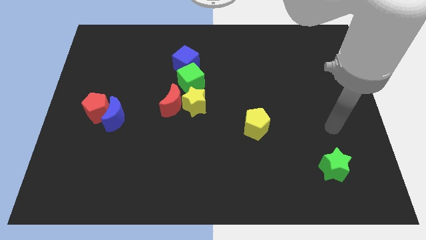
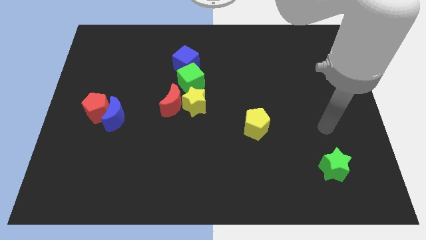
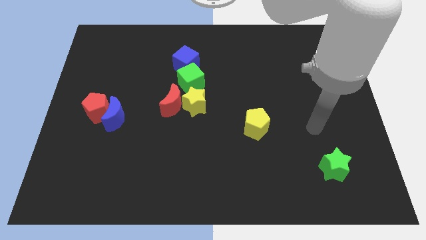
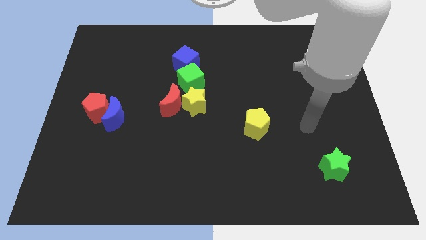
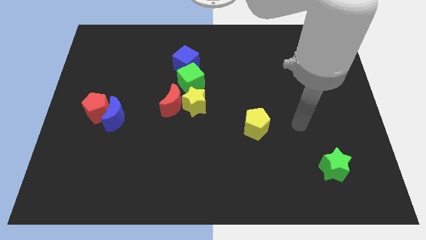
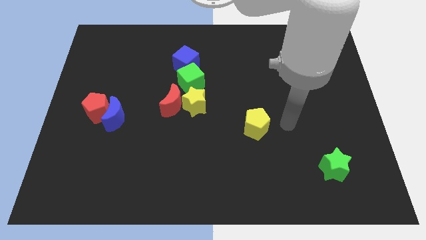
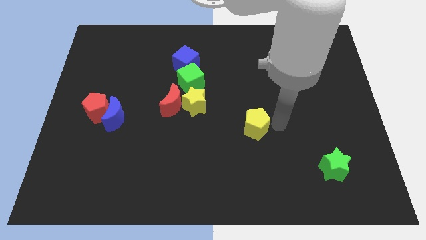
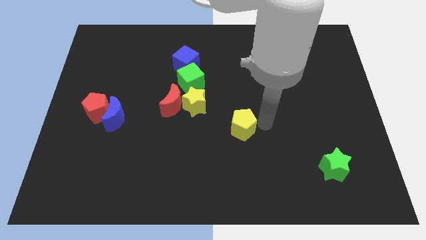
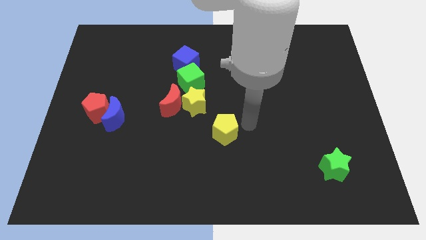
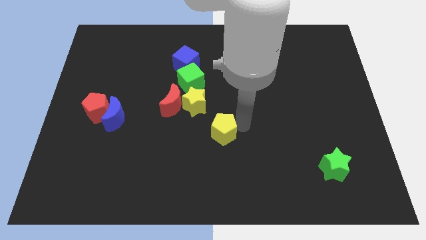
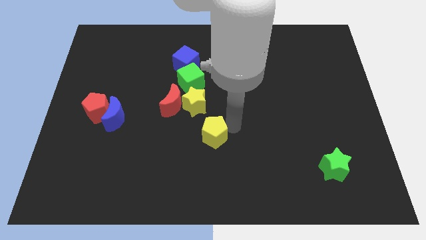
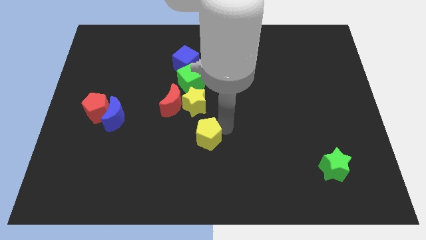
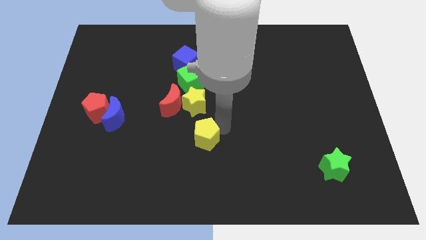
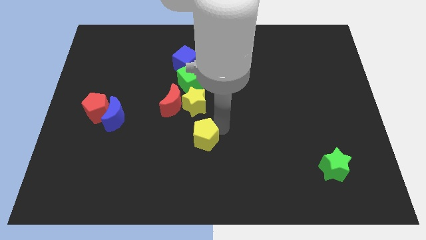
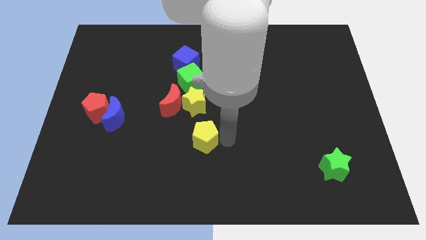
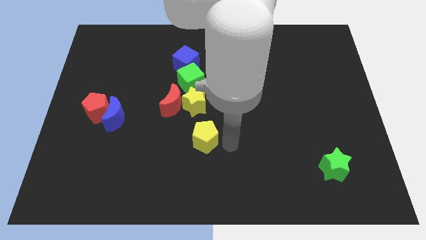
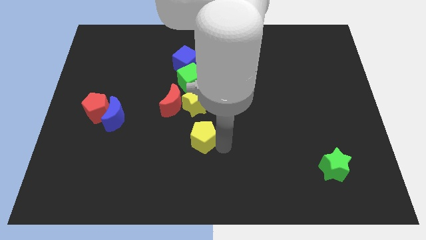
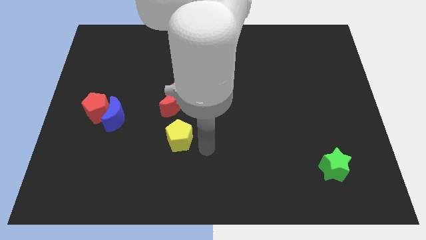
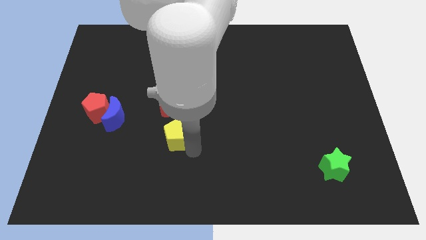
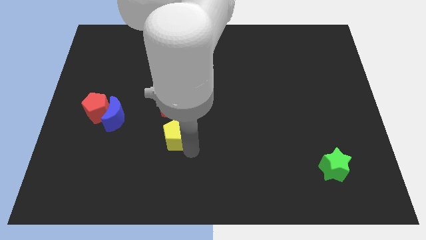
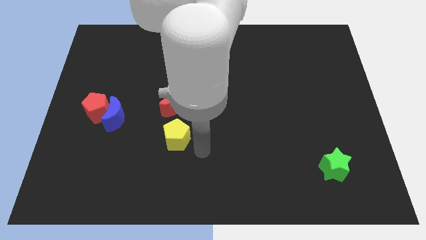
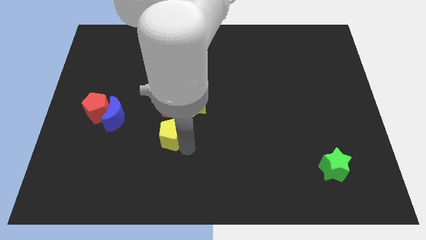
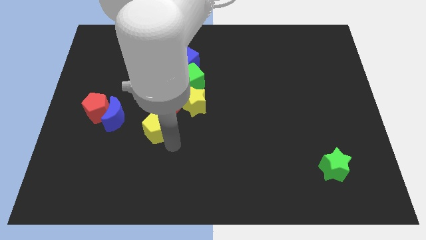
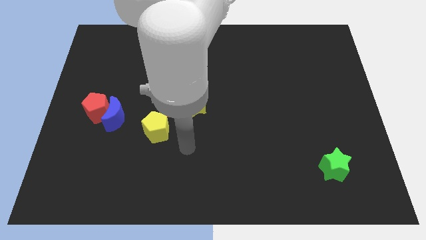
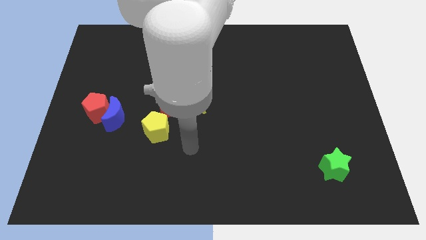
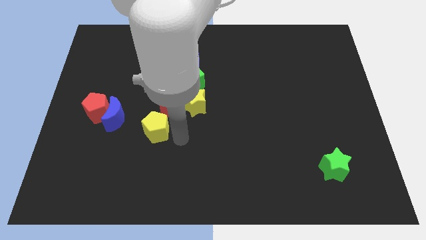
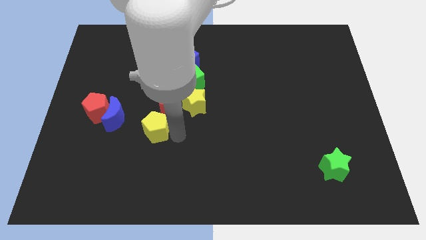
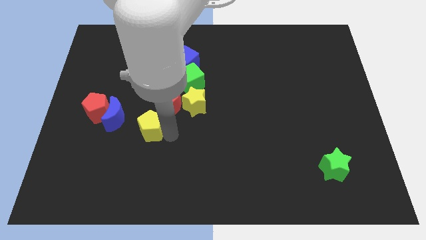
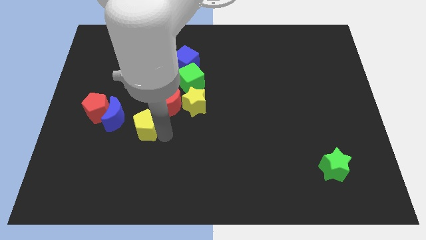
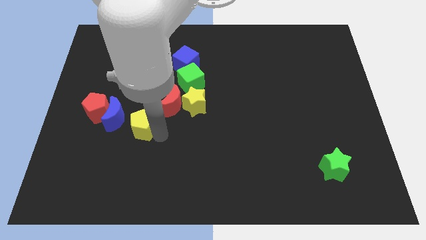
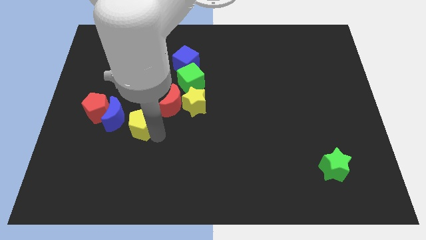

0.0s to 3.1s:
move the yellow pentagon towards the right side of the blue moon

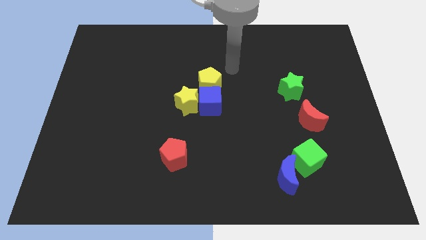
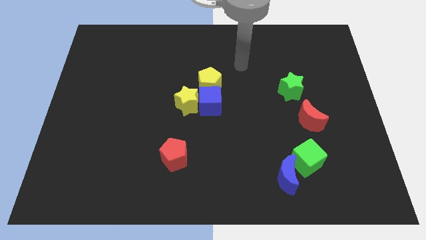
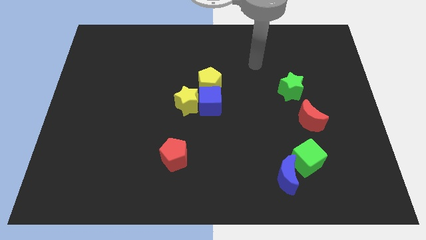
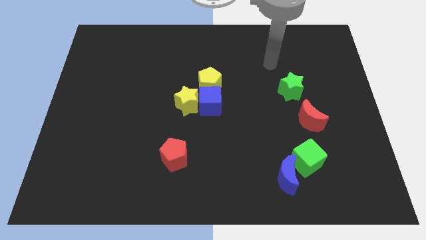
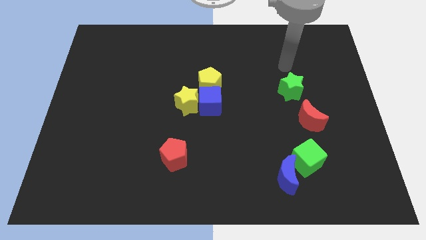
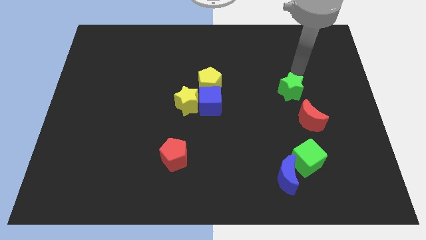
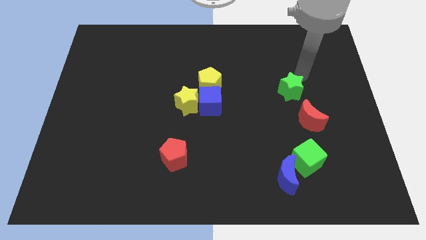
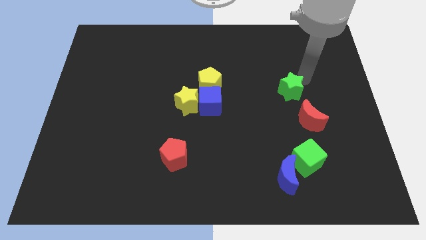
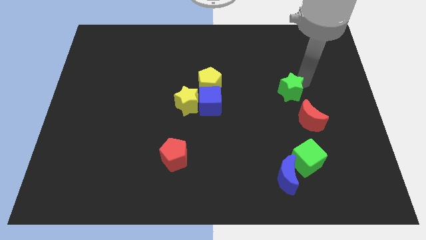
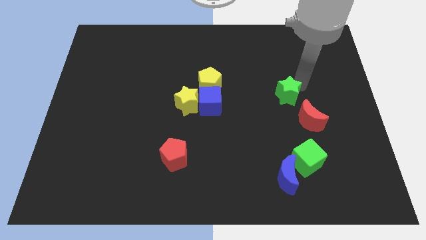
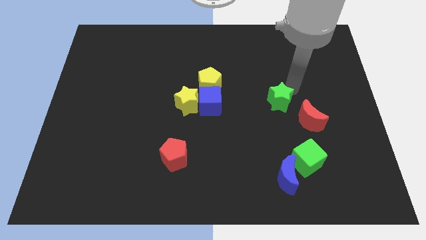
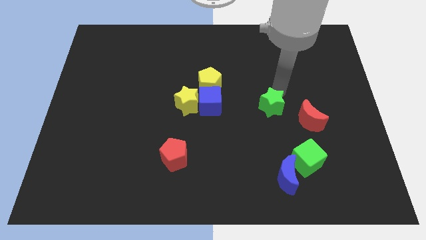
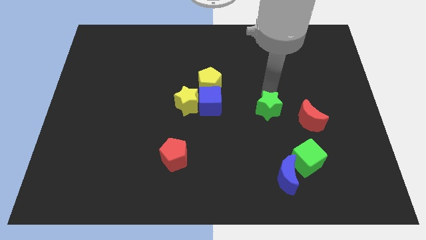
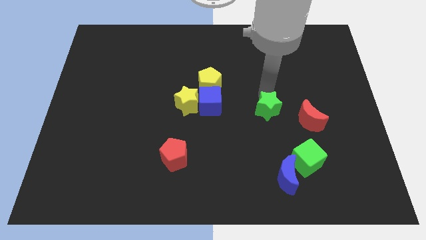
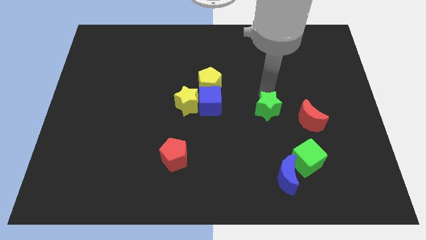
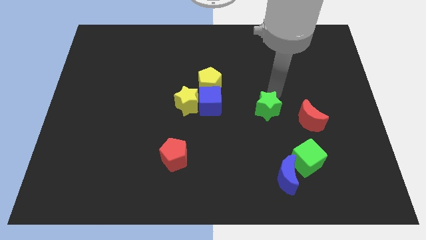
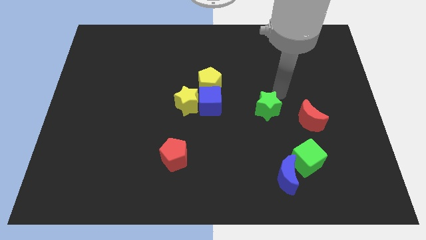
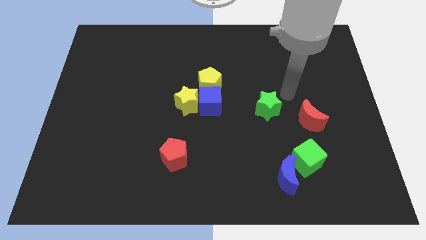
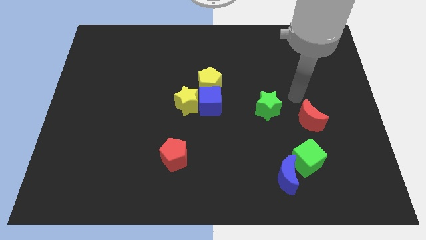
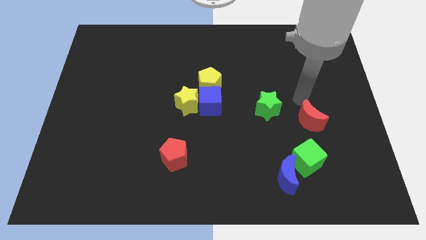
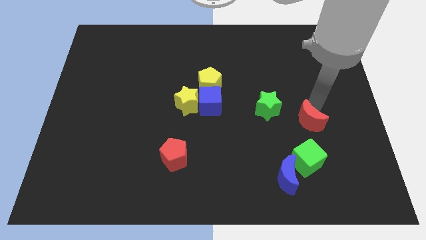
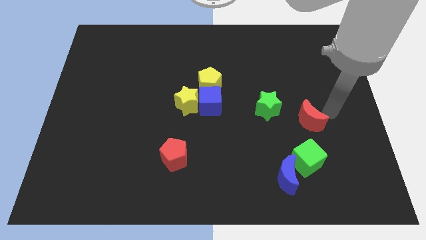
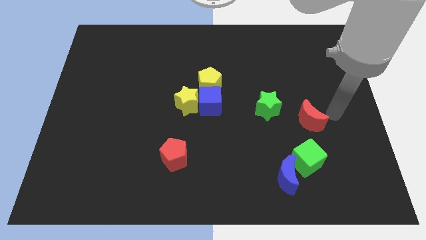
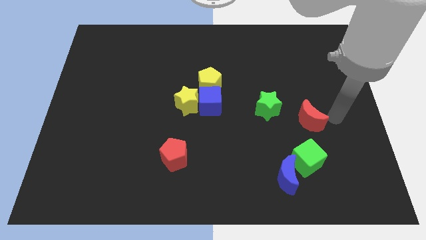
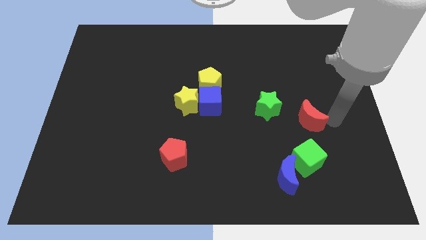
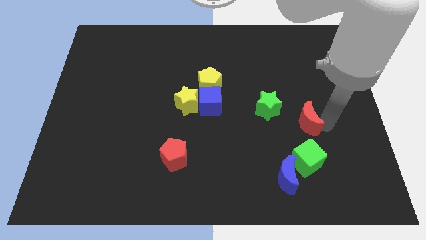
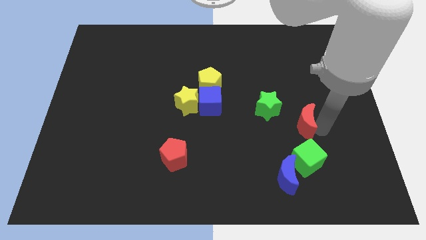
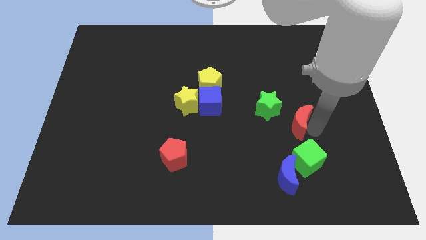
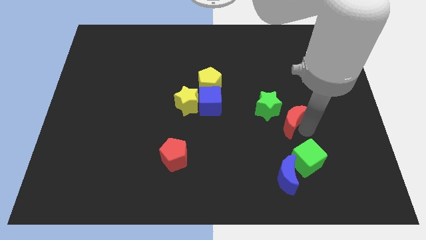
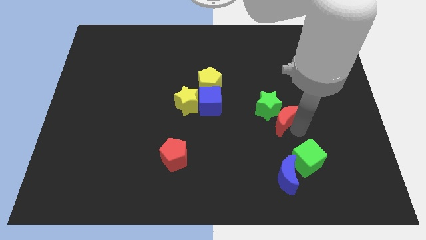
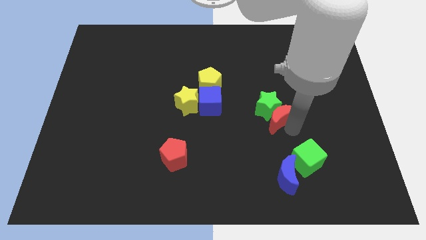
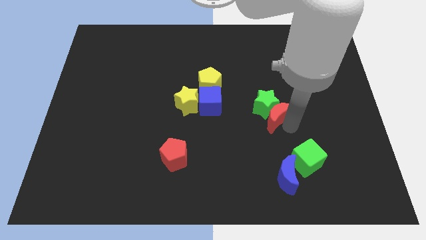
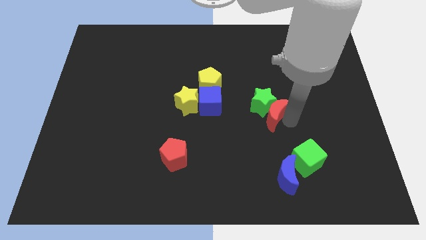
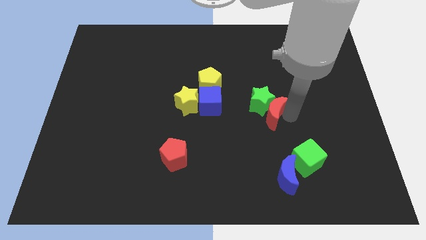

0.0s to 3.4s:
slide the green star and red moon to the right side of the blue cube

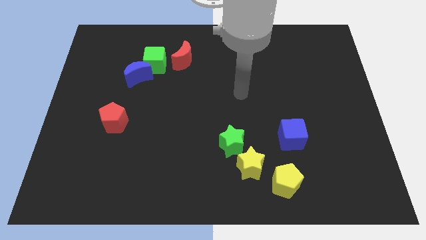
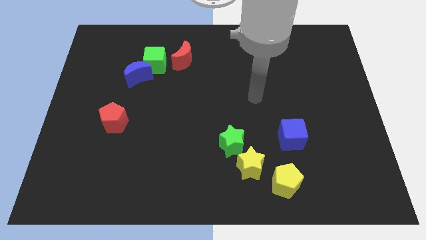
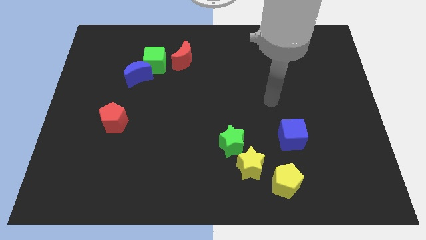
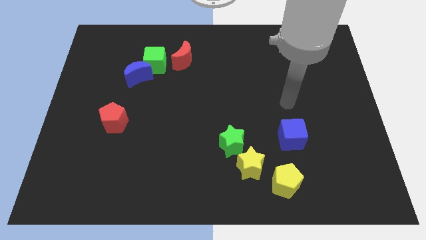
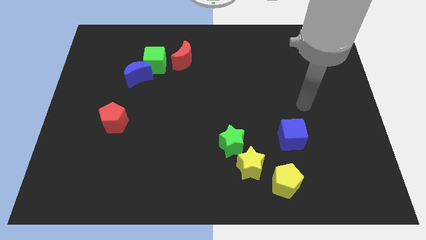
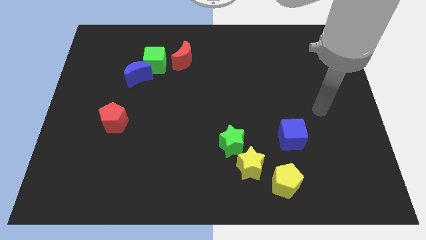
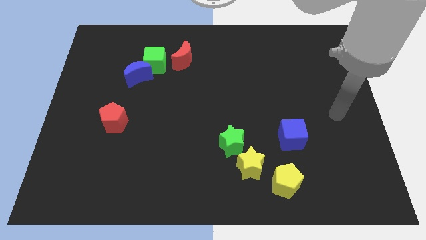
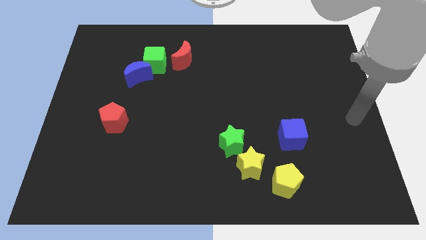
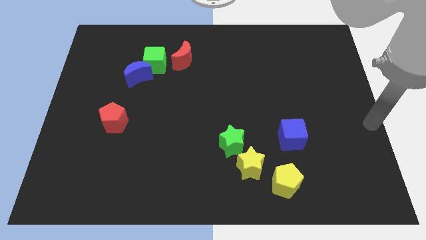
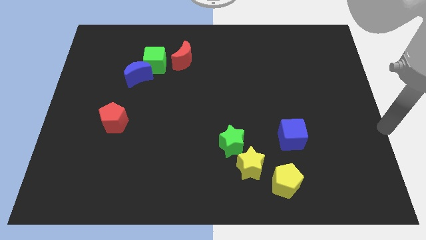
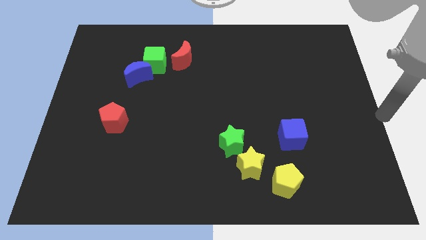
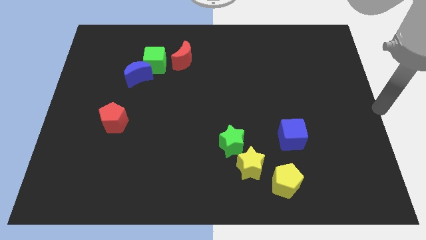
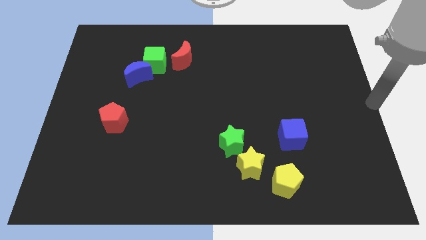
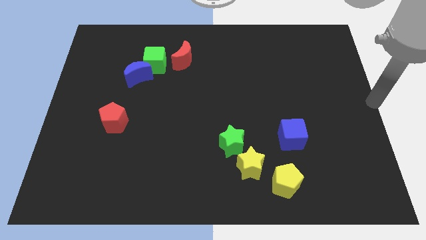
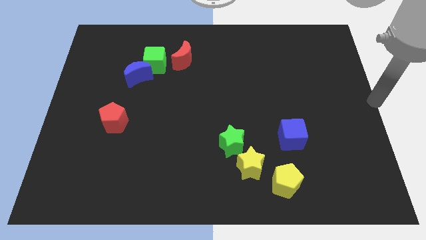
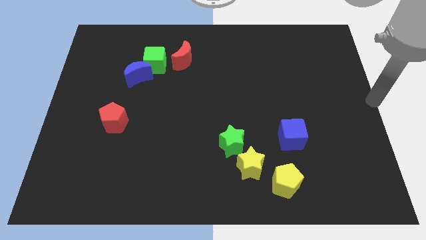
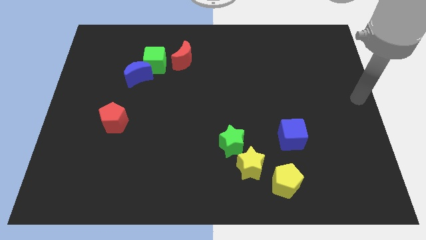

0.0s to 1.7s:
move your arm to the center right side of the board

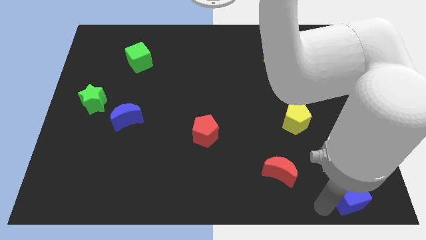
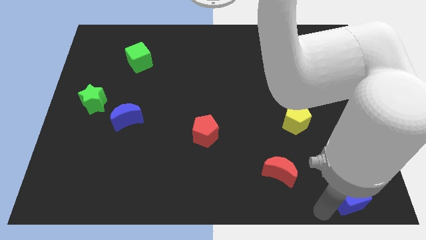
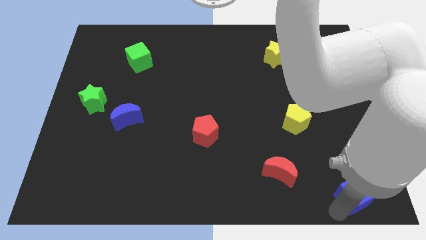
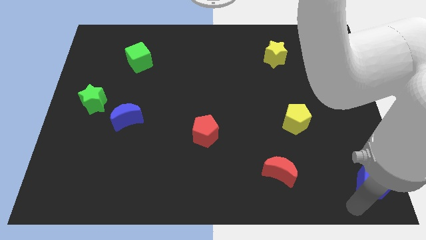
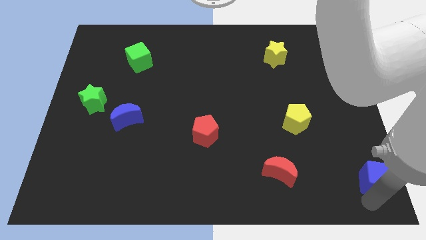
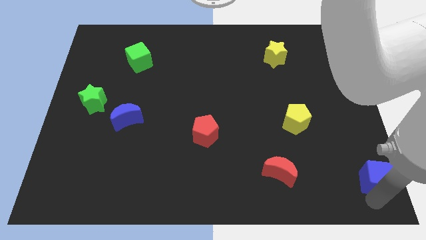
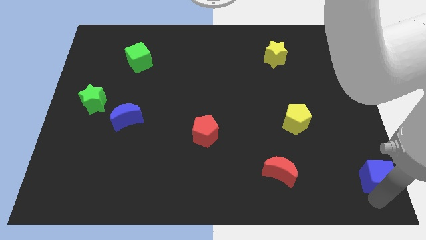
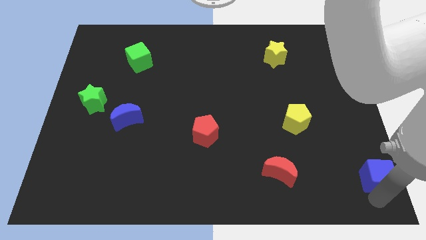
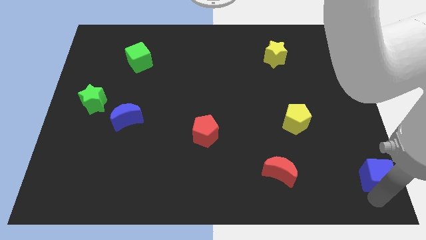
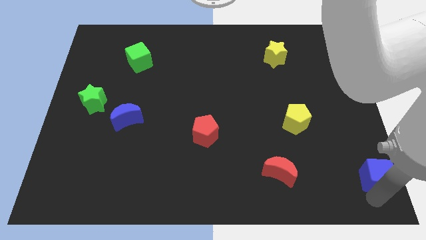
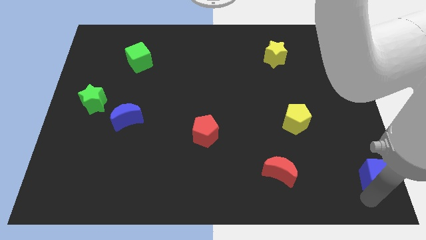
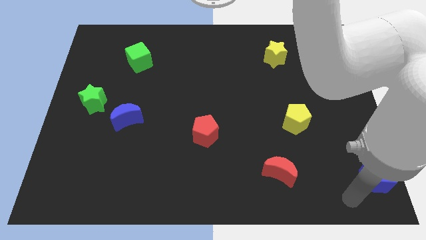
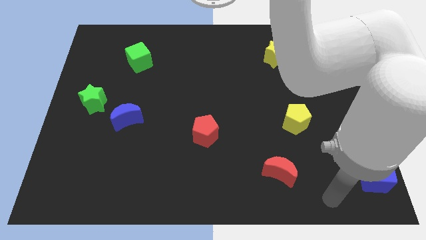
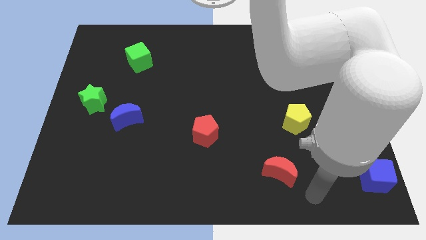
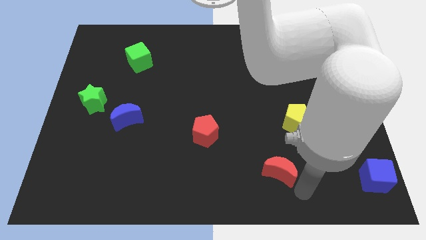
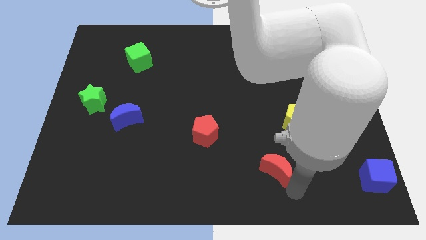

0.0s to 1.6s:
place the blue cube to the bottom right of the board
